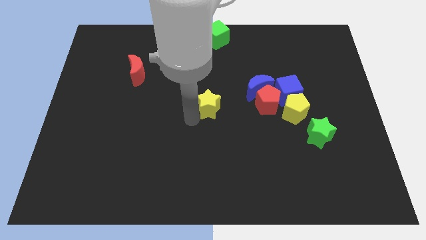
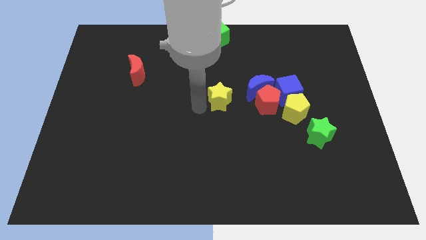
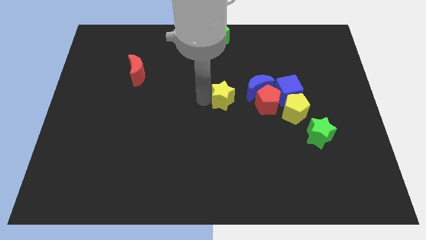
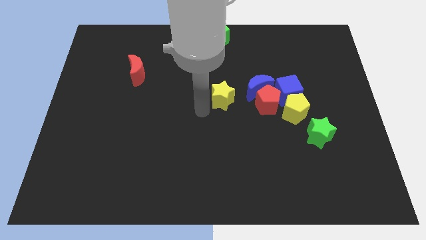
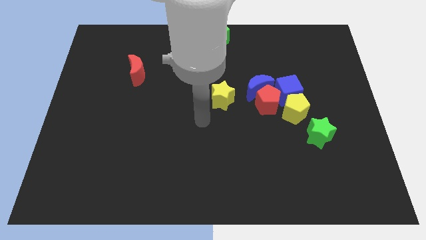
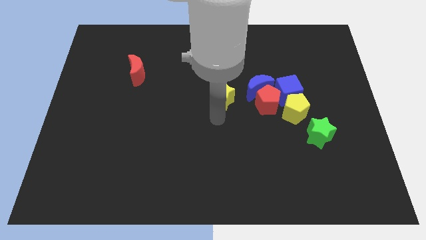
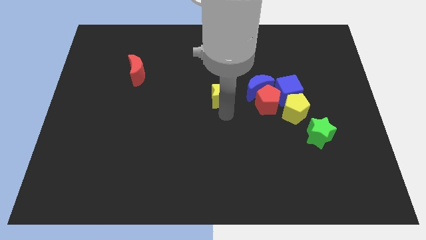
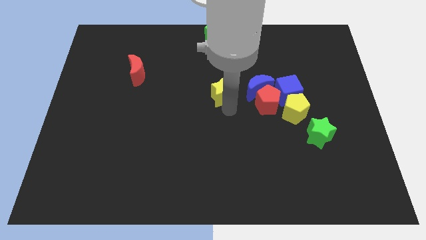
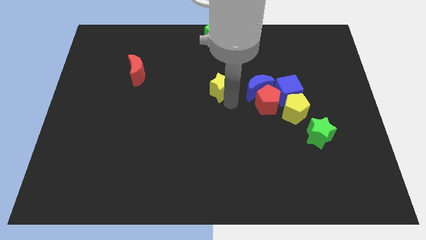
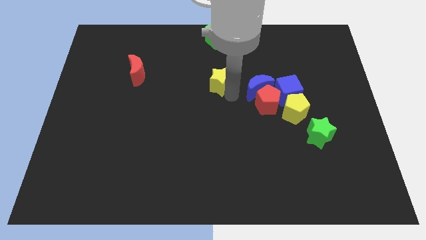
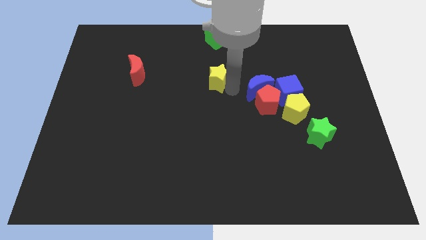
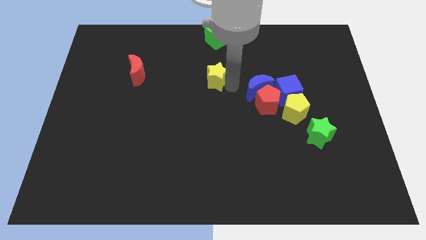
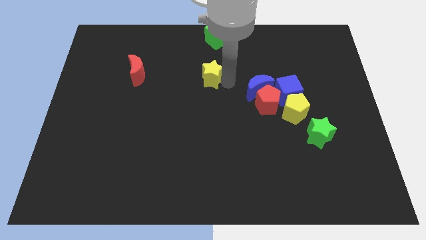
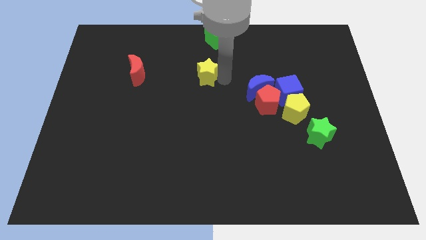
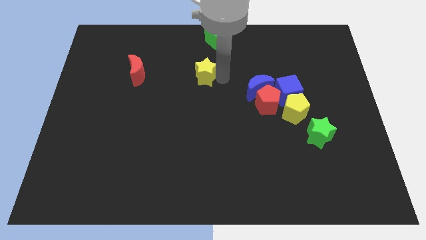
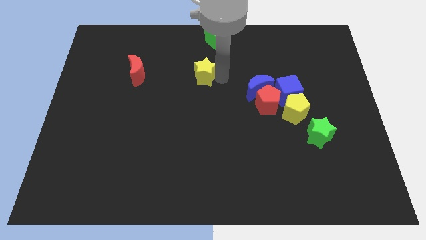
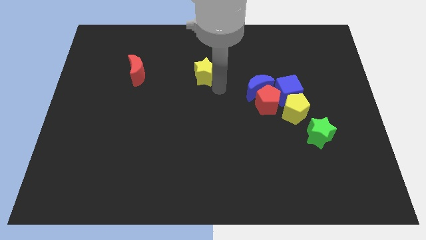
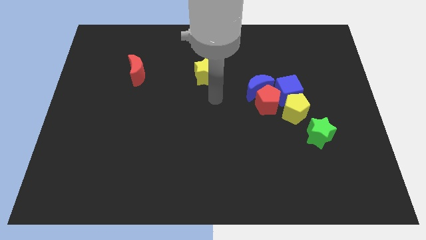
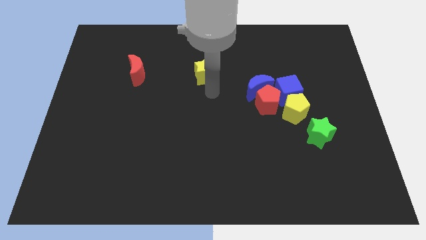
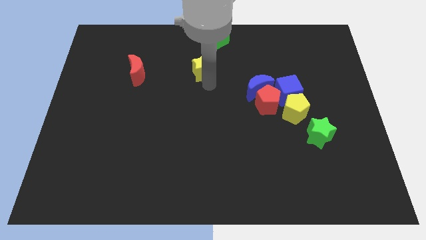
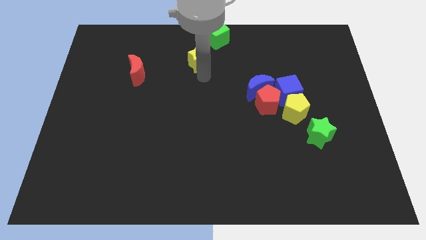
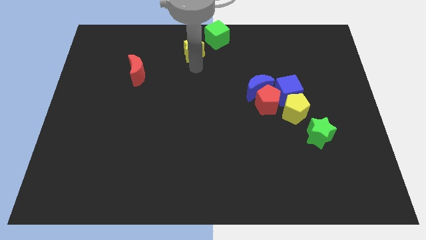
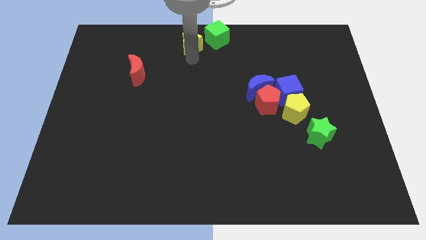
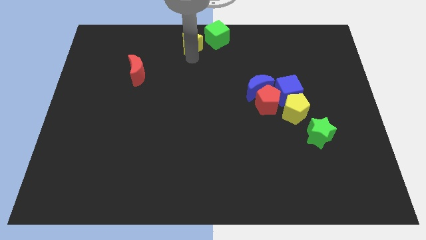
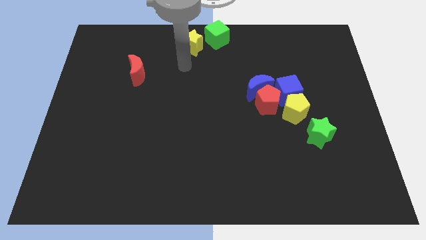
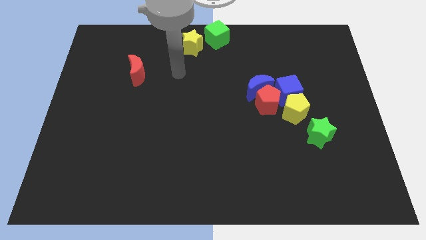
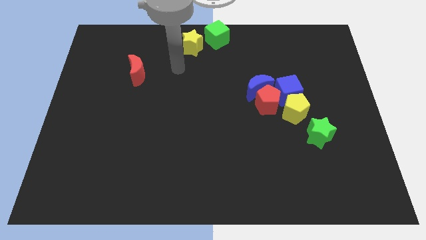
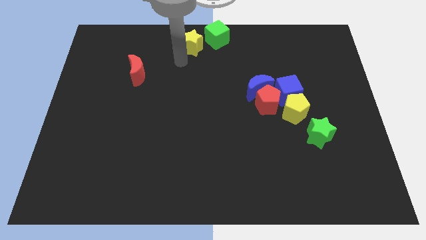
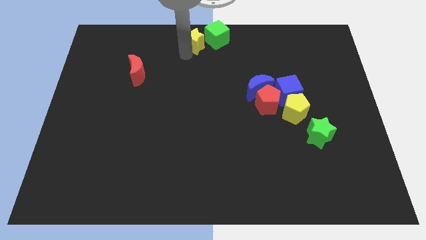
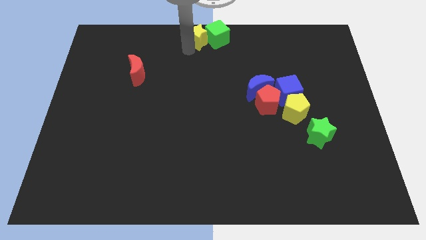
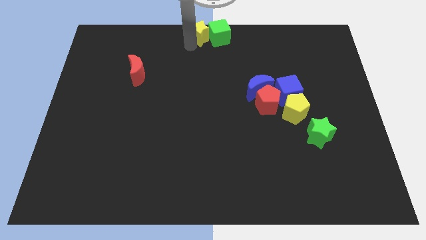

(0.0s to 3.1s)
place the yellow star at the top center

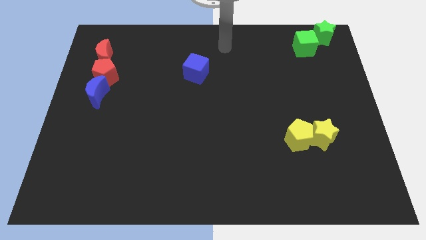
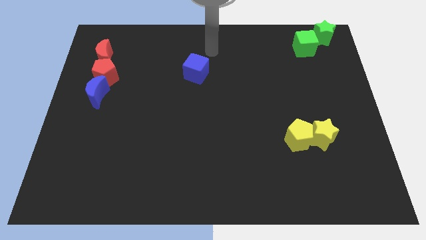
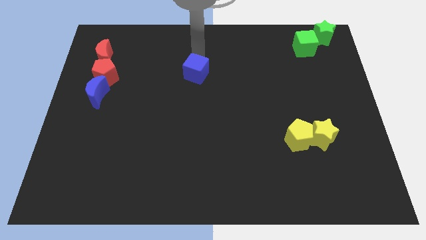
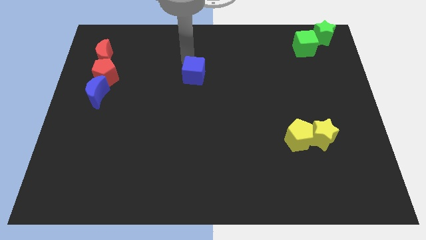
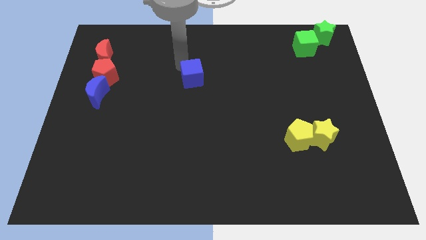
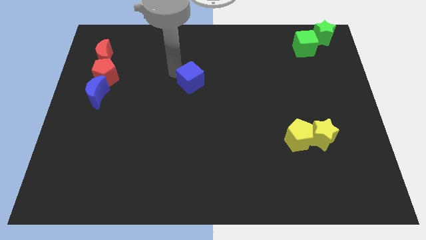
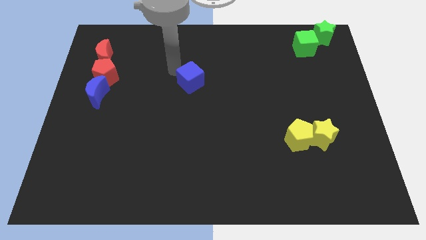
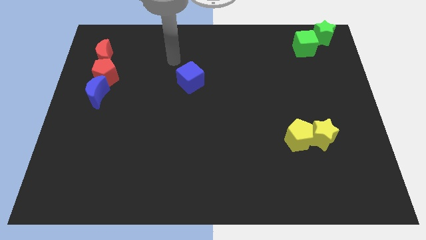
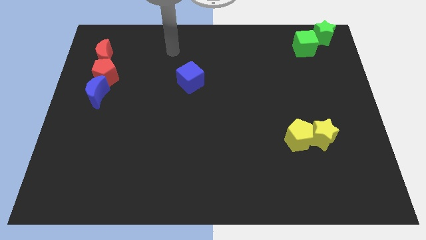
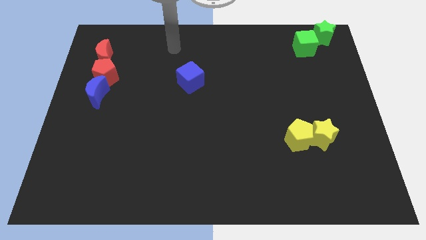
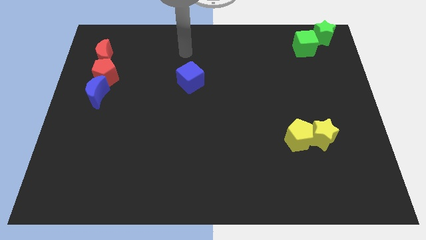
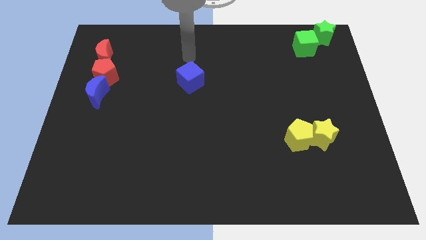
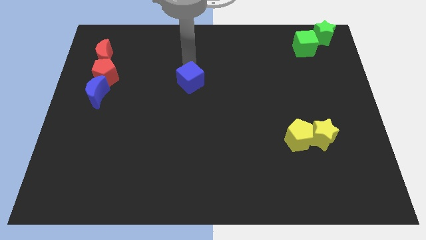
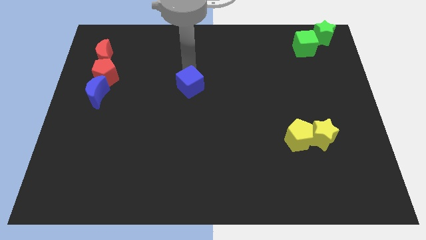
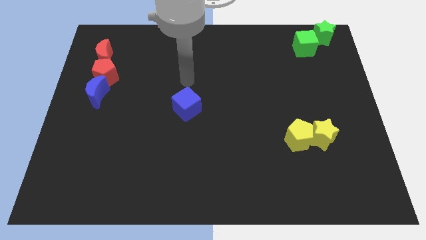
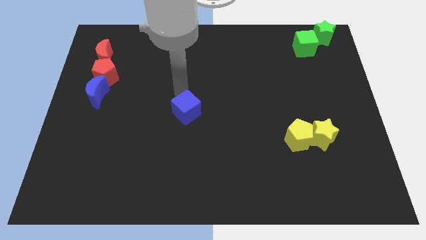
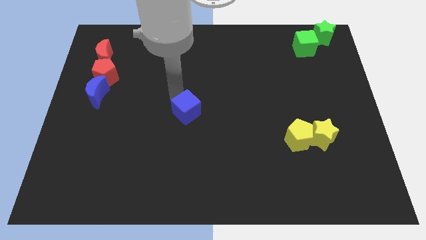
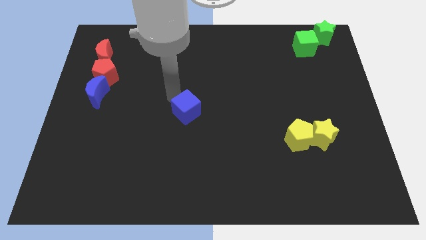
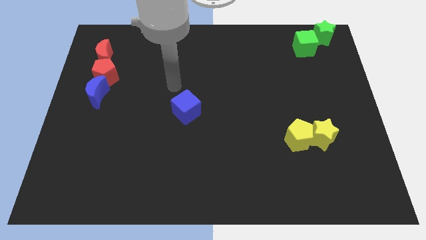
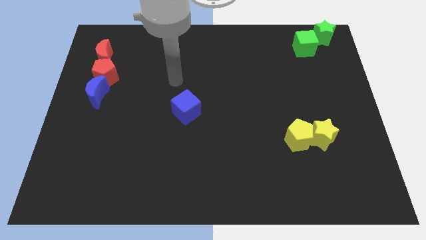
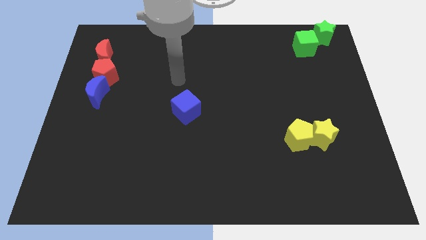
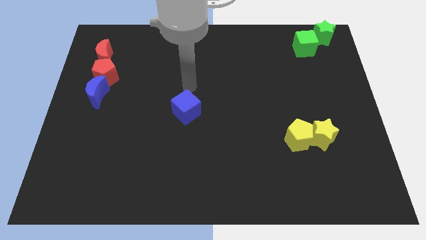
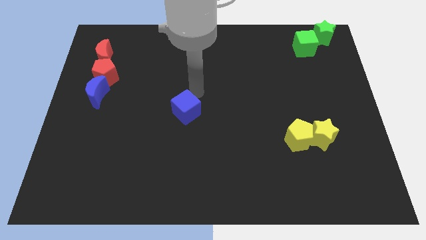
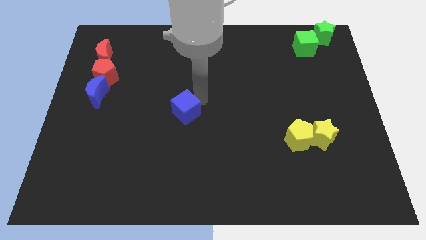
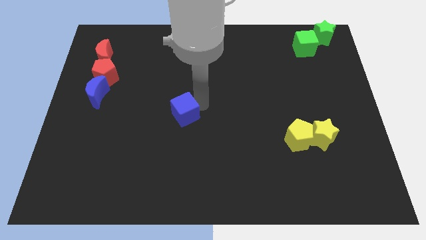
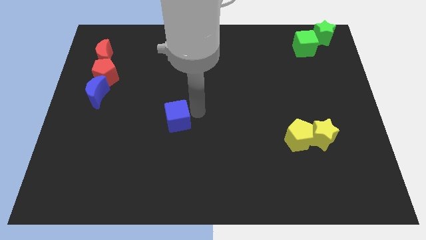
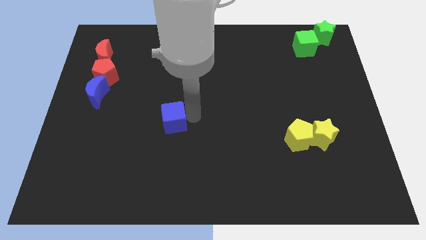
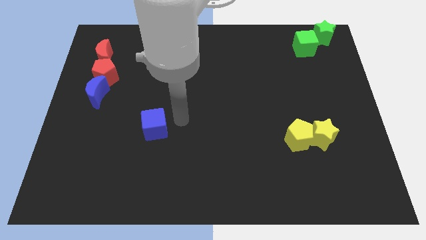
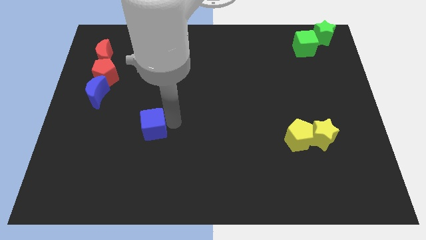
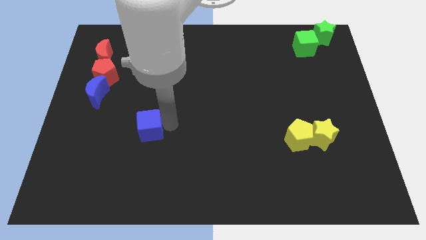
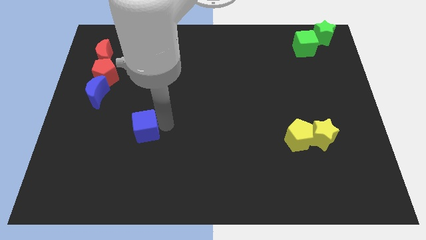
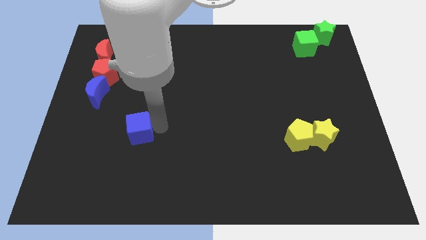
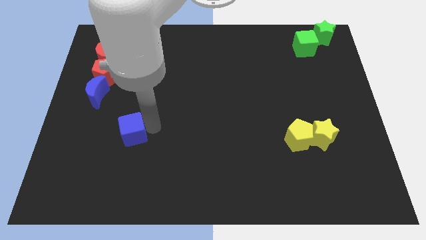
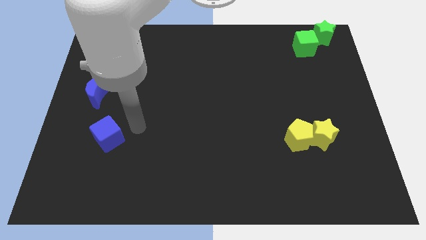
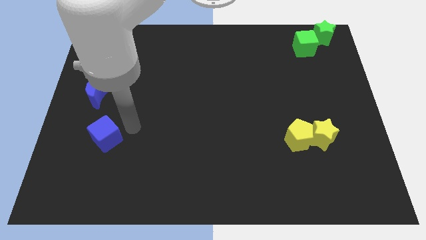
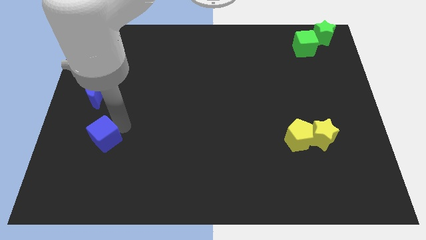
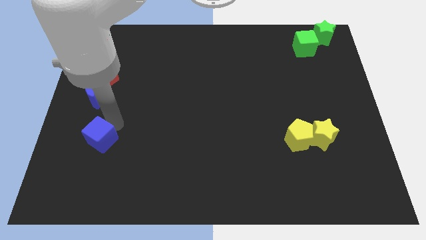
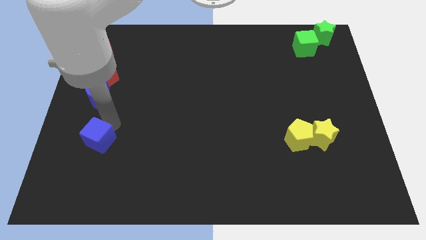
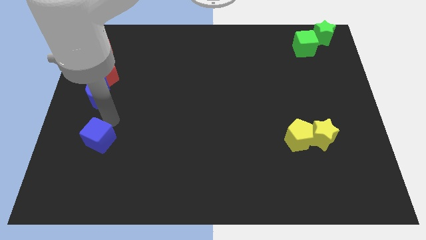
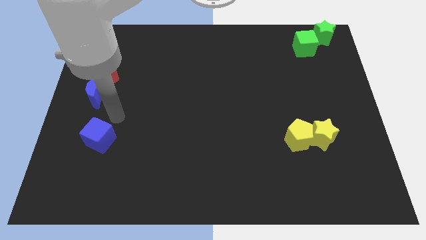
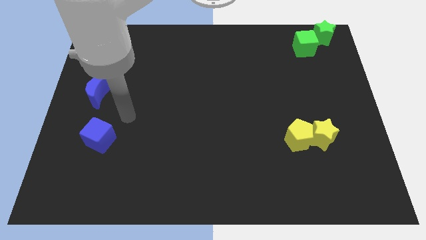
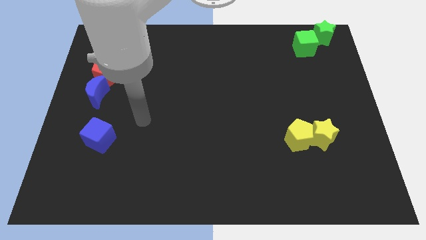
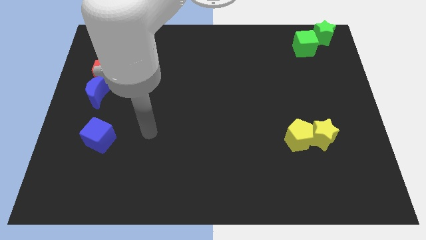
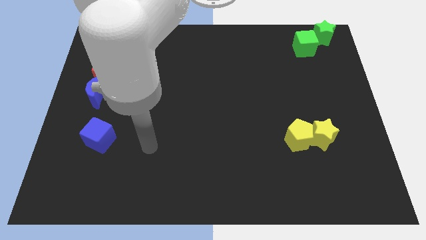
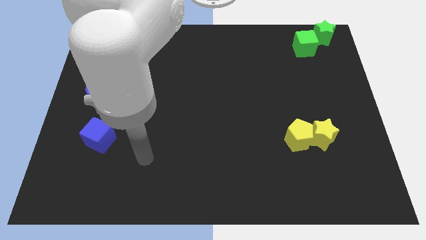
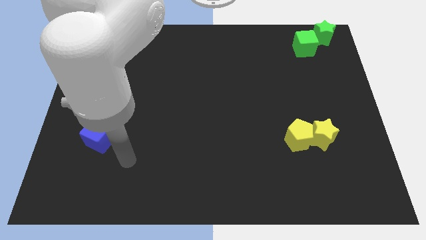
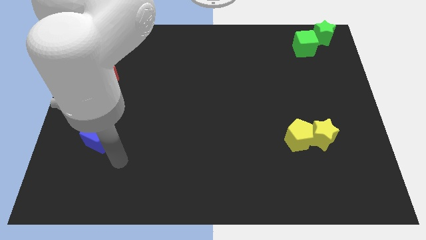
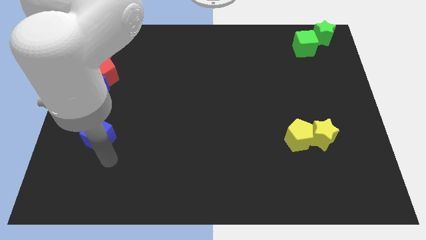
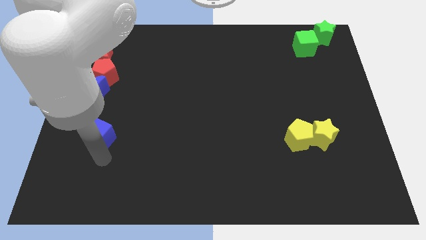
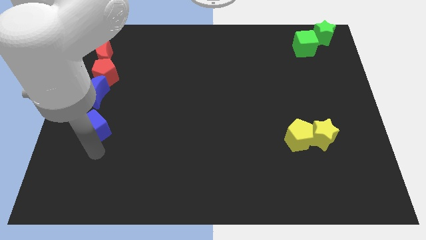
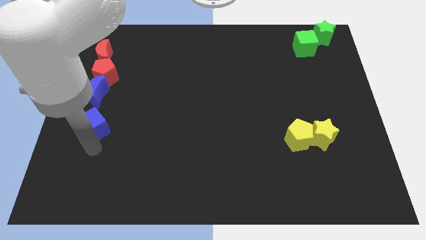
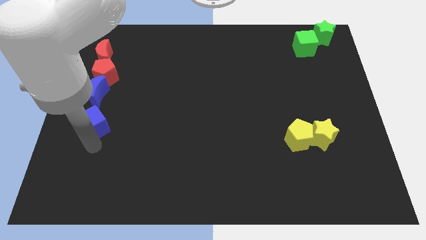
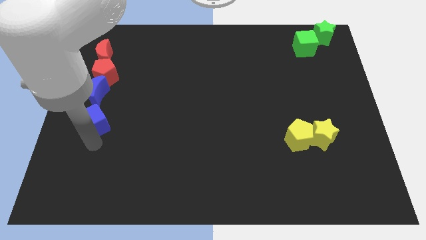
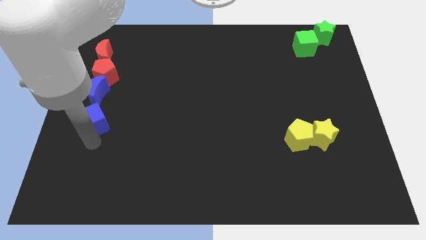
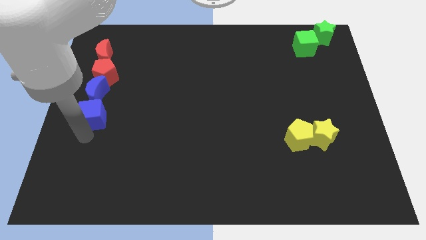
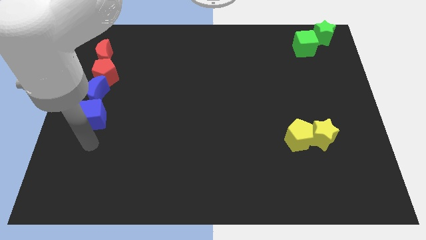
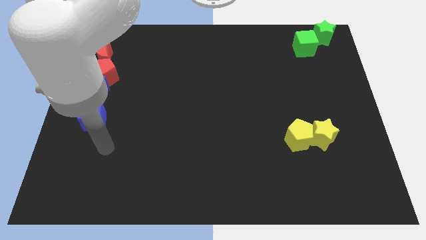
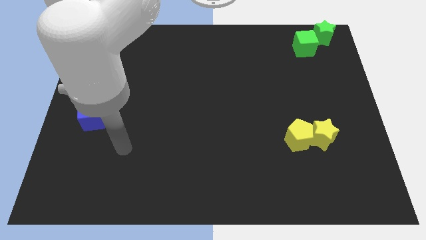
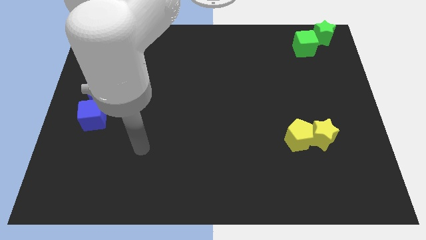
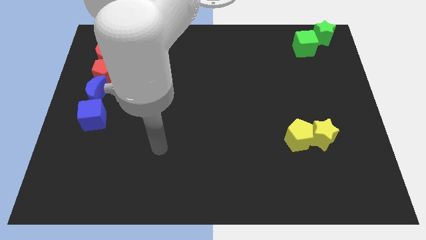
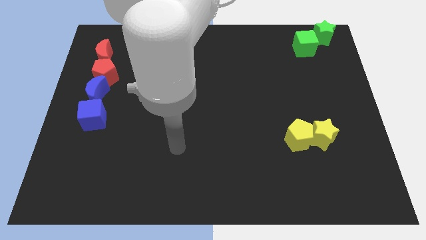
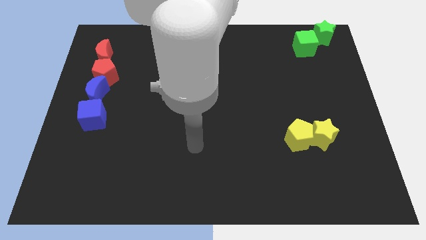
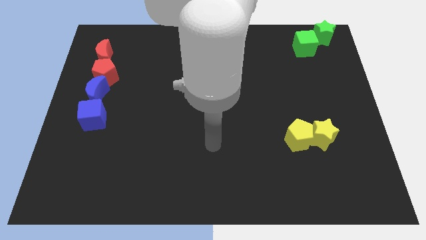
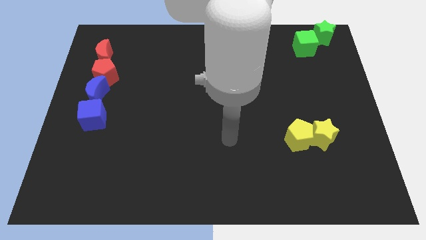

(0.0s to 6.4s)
move the blue cube to the bottom of the blue crescent
